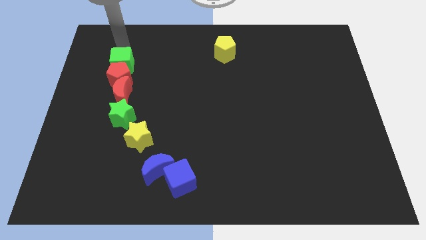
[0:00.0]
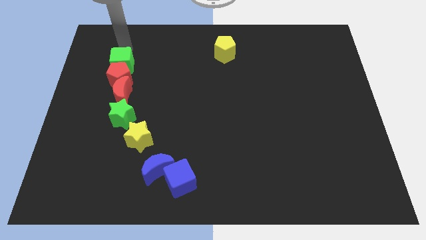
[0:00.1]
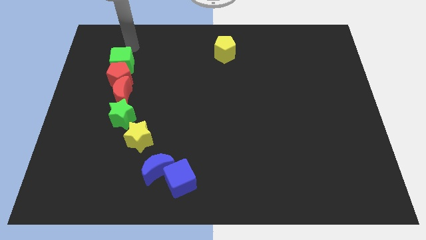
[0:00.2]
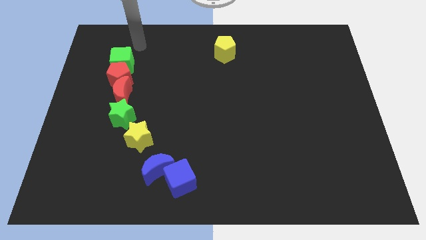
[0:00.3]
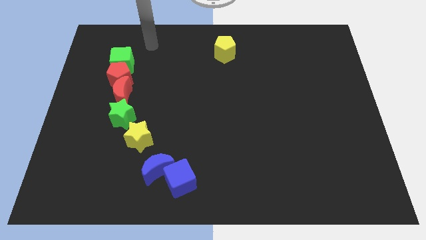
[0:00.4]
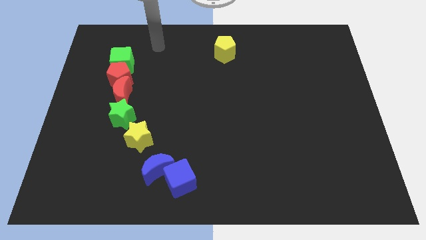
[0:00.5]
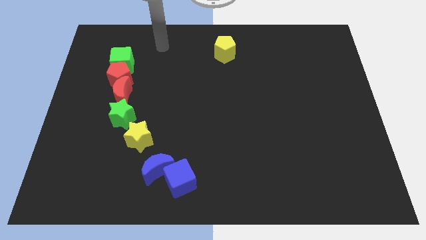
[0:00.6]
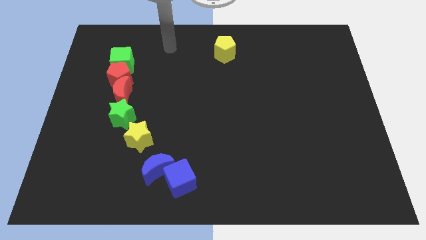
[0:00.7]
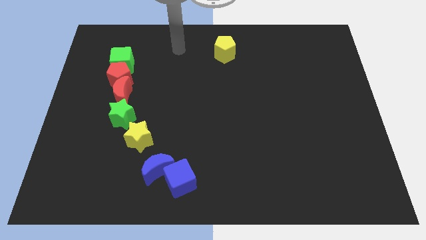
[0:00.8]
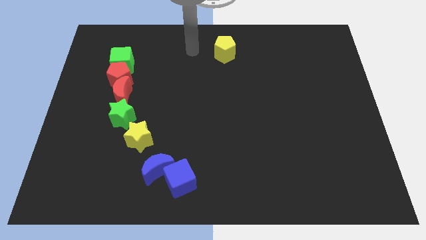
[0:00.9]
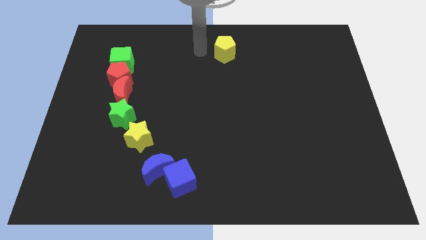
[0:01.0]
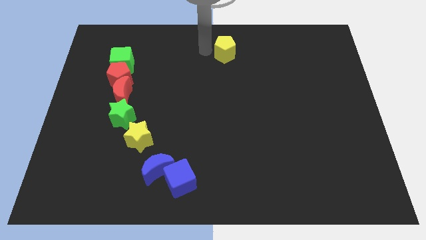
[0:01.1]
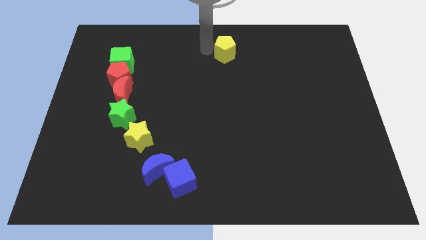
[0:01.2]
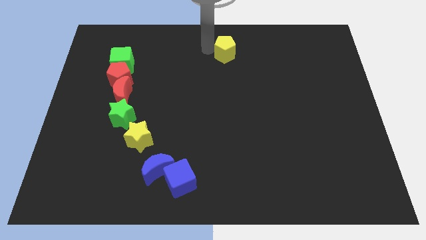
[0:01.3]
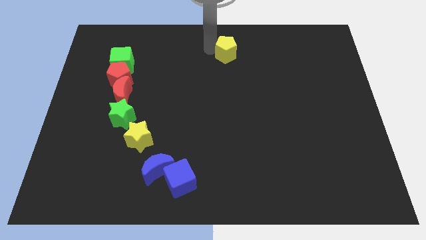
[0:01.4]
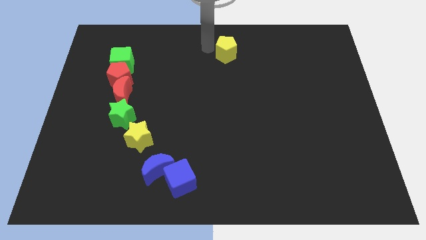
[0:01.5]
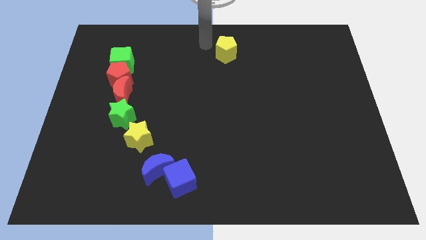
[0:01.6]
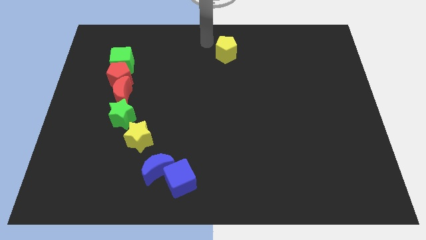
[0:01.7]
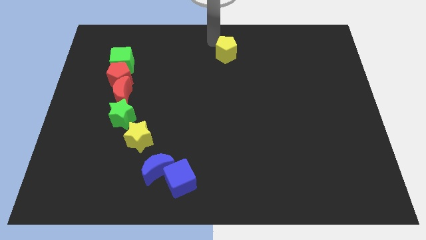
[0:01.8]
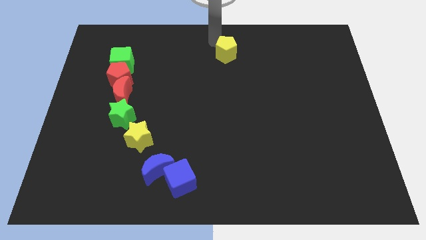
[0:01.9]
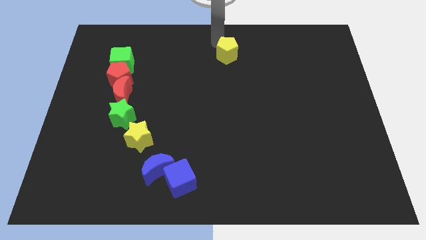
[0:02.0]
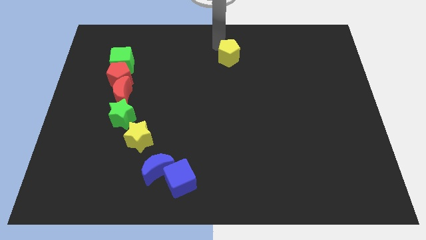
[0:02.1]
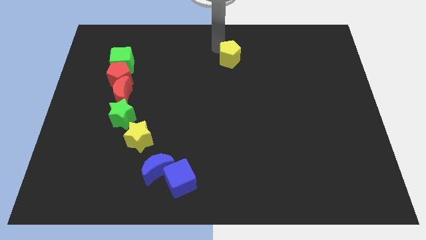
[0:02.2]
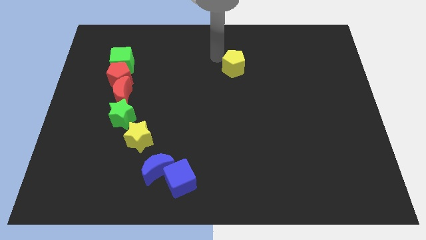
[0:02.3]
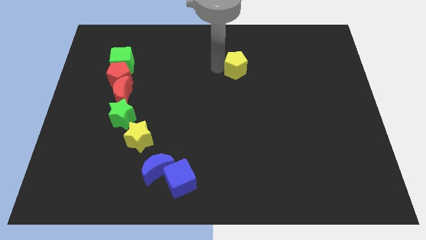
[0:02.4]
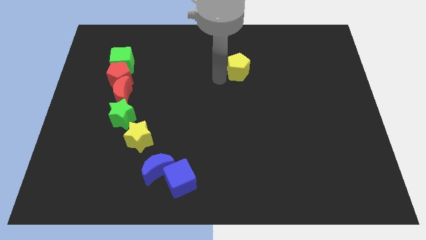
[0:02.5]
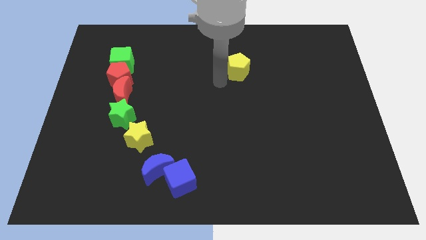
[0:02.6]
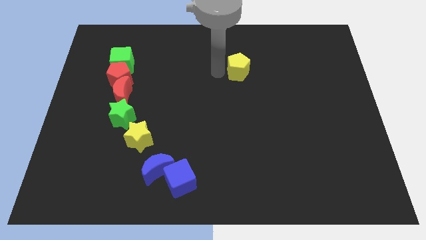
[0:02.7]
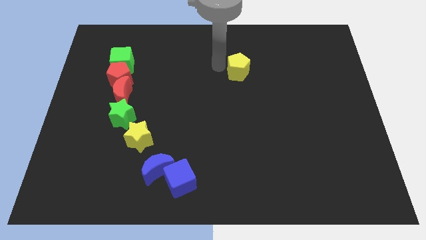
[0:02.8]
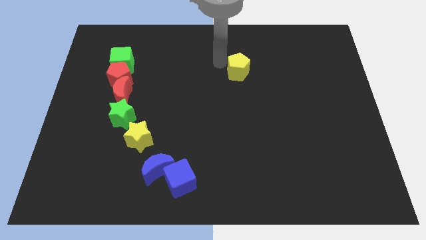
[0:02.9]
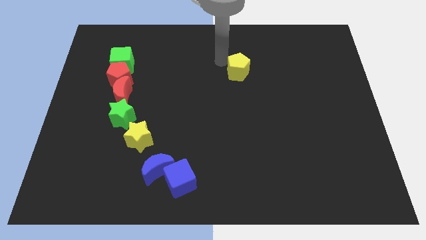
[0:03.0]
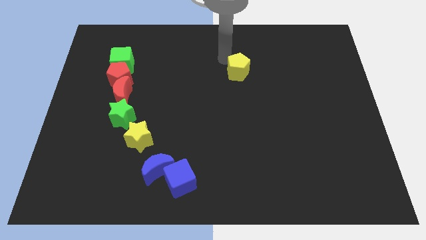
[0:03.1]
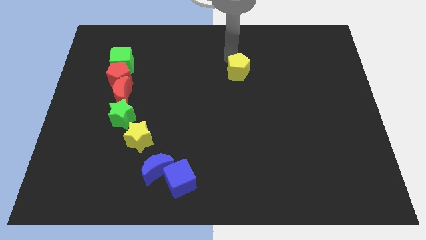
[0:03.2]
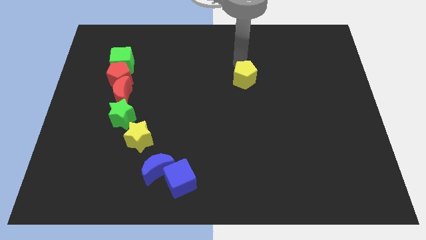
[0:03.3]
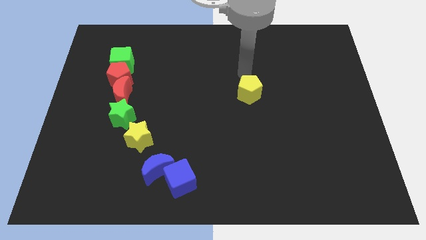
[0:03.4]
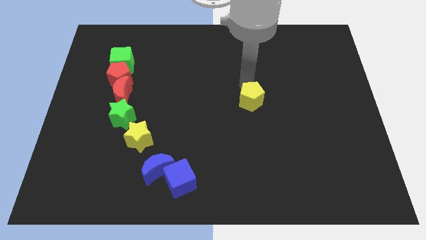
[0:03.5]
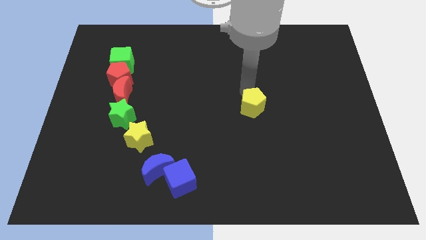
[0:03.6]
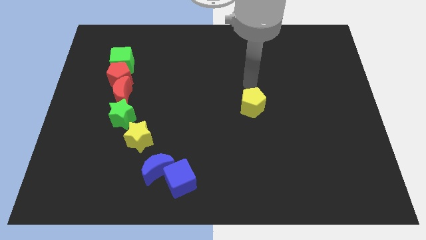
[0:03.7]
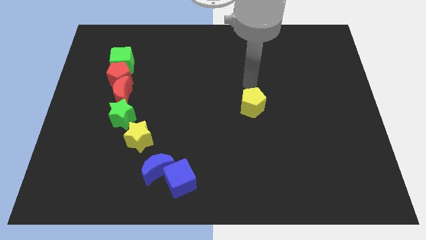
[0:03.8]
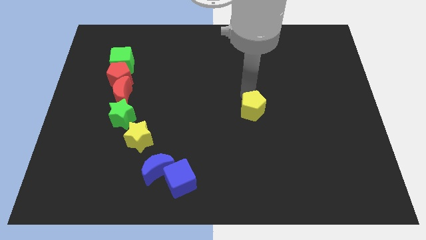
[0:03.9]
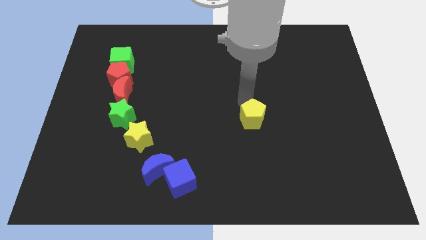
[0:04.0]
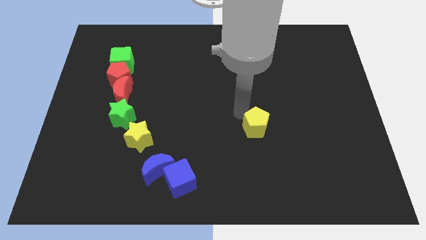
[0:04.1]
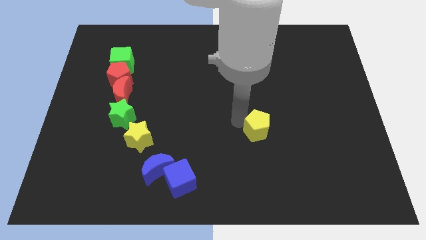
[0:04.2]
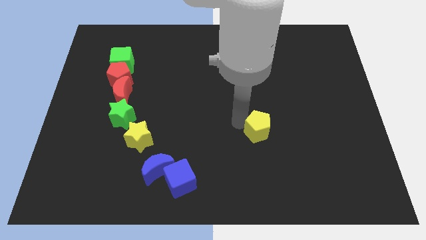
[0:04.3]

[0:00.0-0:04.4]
push the yellow pentagon horizontally to the right of the yellow star

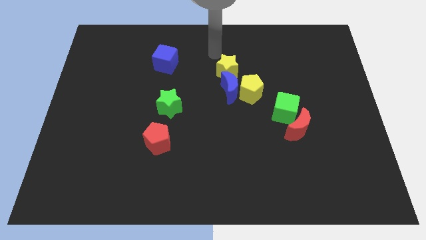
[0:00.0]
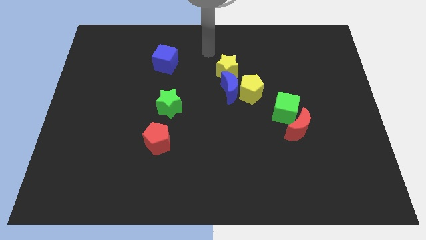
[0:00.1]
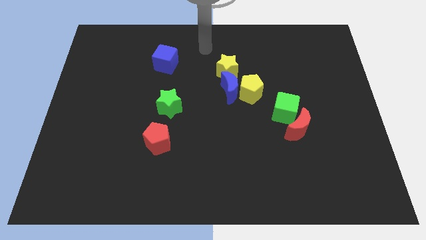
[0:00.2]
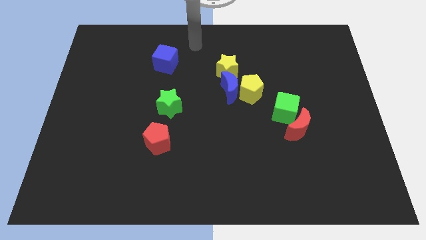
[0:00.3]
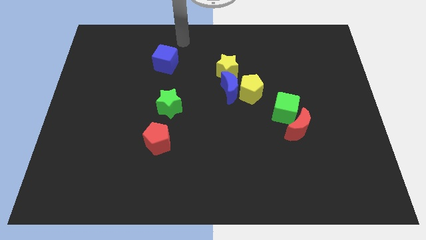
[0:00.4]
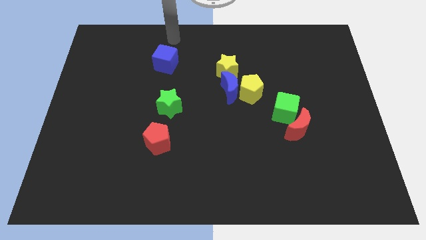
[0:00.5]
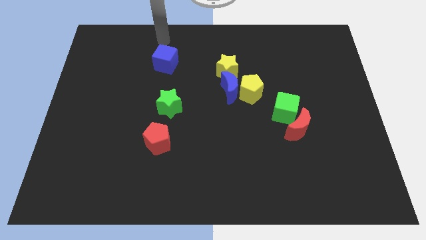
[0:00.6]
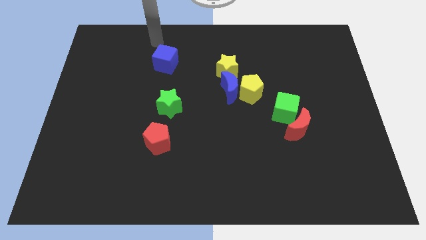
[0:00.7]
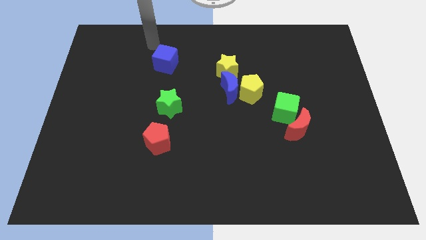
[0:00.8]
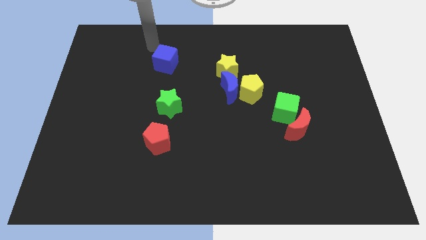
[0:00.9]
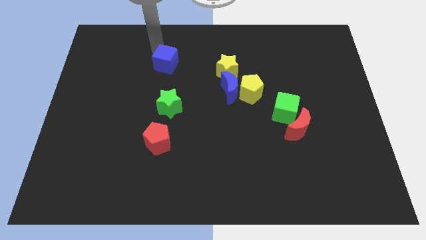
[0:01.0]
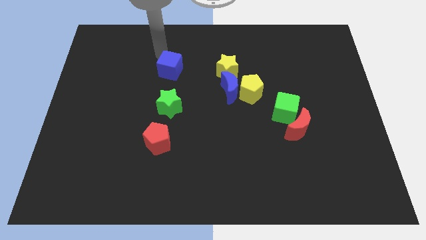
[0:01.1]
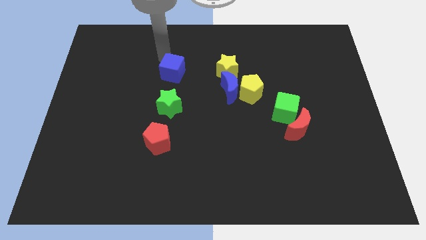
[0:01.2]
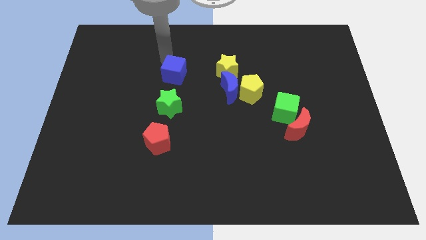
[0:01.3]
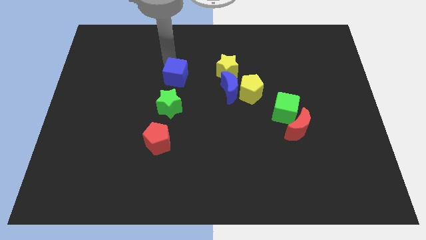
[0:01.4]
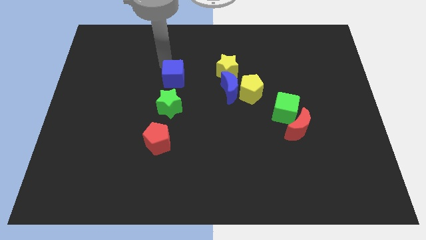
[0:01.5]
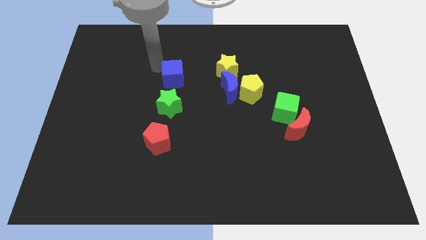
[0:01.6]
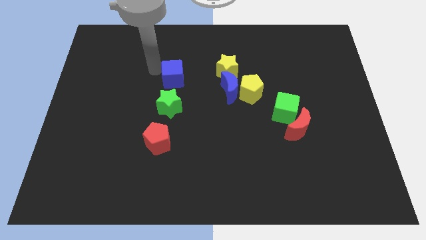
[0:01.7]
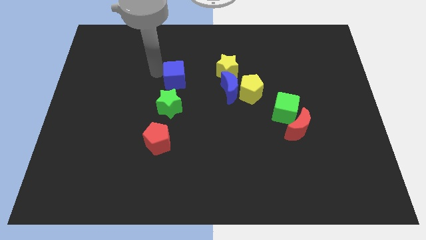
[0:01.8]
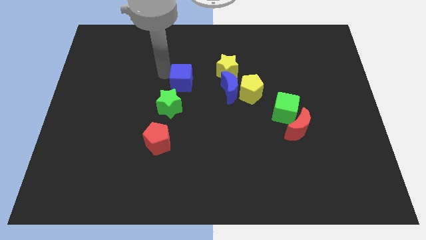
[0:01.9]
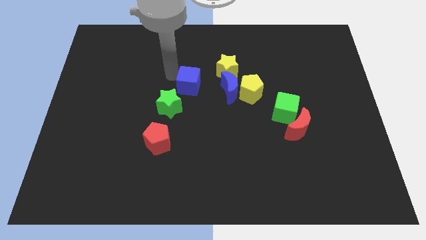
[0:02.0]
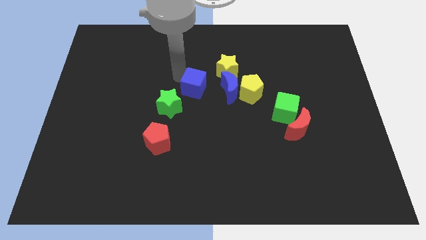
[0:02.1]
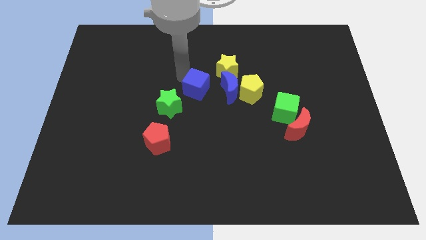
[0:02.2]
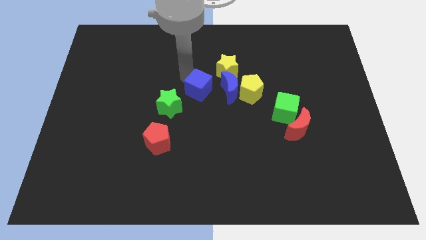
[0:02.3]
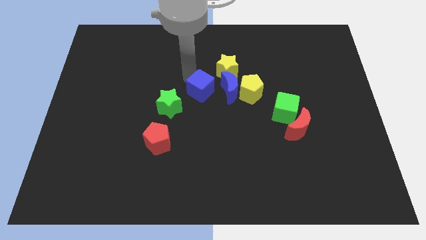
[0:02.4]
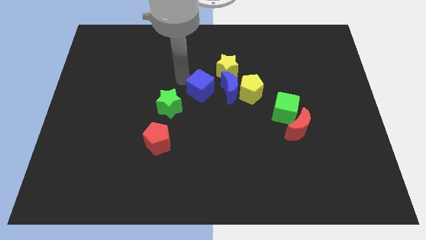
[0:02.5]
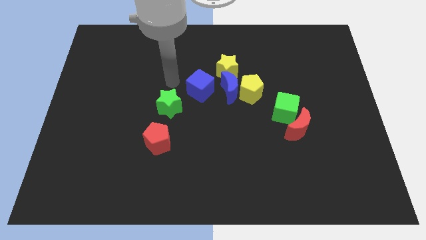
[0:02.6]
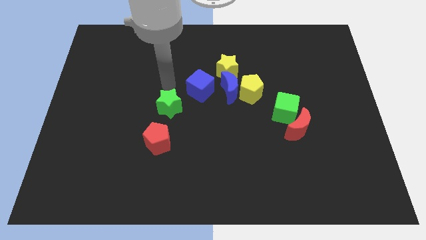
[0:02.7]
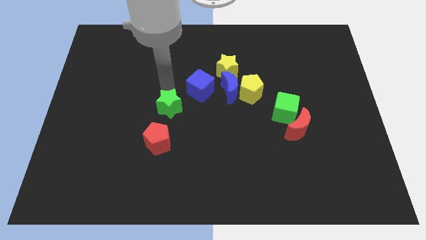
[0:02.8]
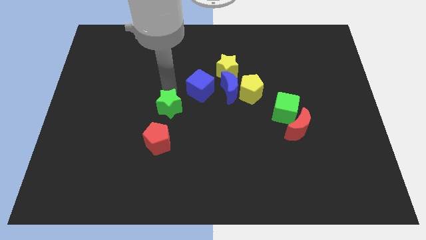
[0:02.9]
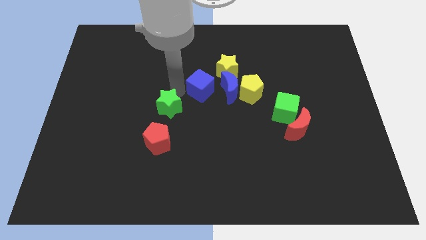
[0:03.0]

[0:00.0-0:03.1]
move the blue cube left to the blue moon

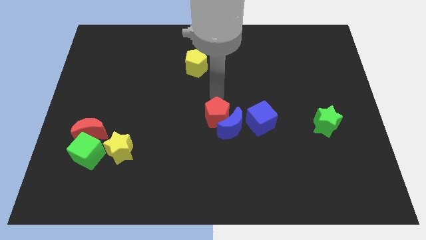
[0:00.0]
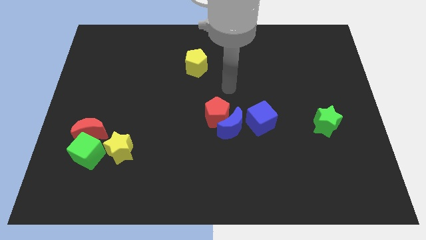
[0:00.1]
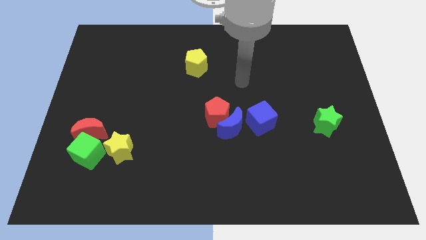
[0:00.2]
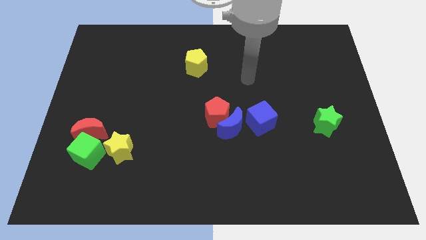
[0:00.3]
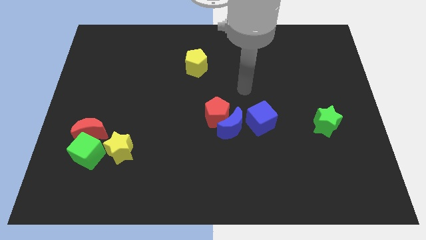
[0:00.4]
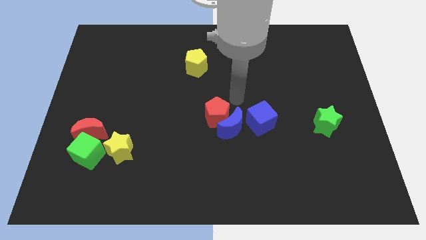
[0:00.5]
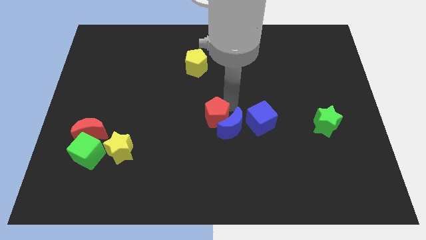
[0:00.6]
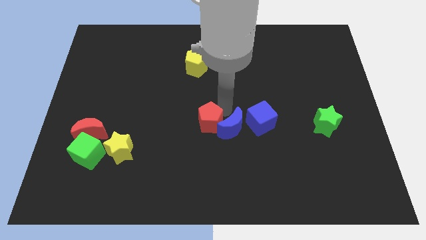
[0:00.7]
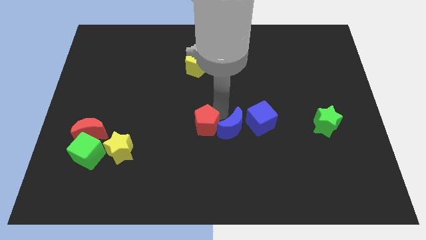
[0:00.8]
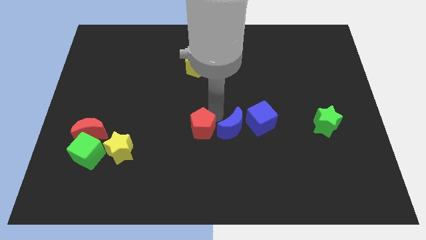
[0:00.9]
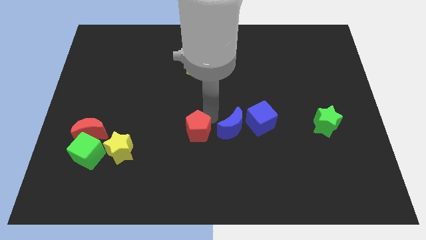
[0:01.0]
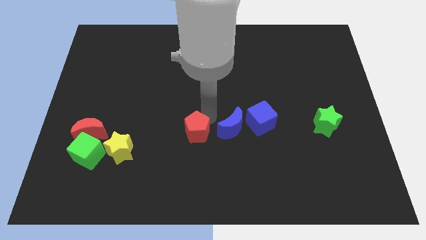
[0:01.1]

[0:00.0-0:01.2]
push the red pentagon to the left of the blue crescent

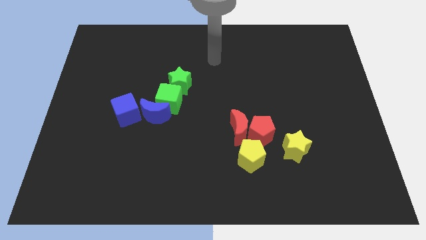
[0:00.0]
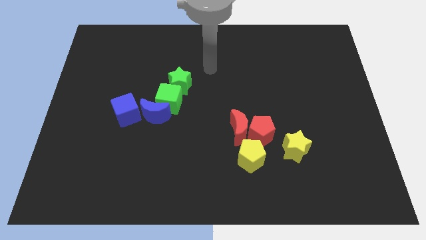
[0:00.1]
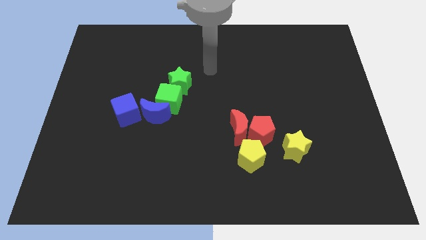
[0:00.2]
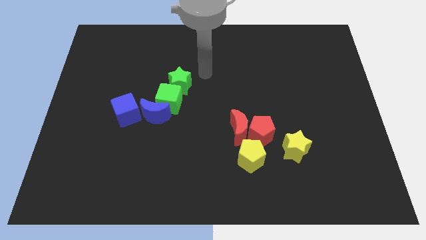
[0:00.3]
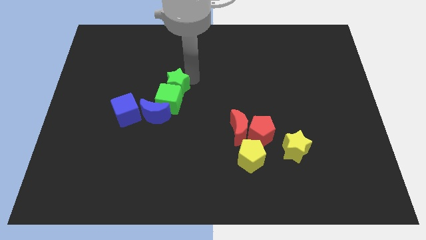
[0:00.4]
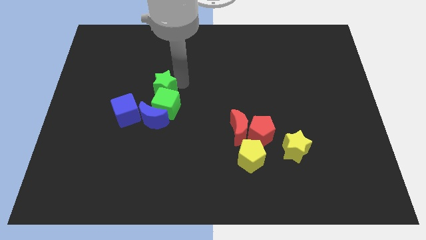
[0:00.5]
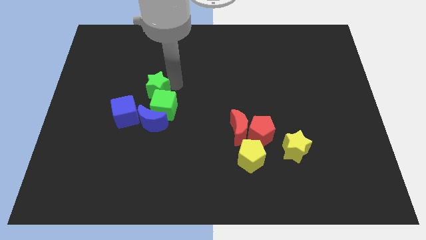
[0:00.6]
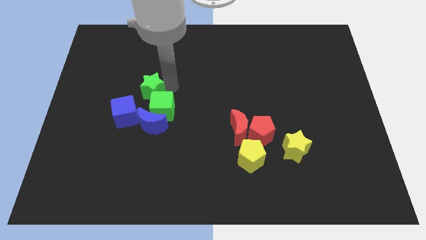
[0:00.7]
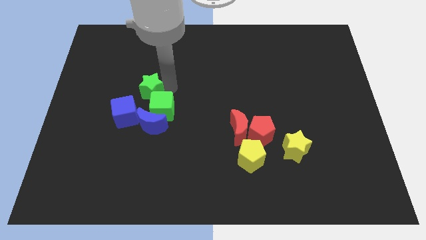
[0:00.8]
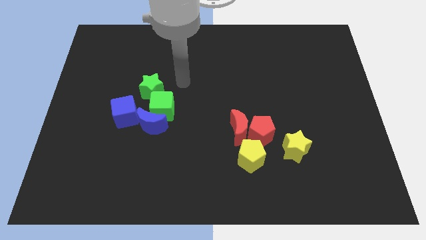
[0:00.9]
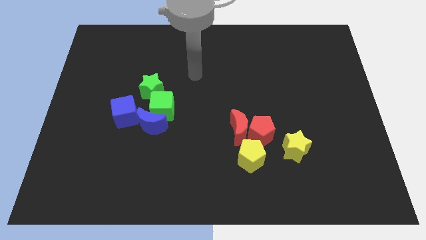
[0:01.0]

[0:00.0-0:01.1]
push green star slightly to the left side of the board
